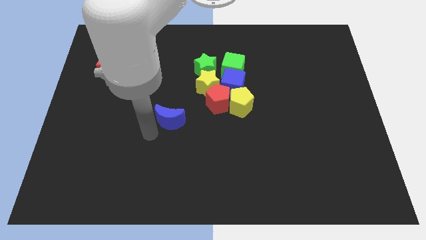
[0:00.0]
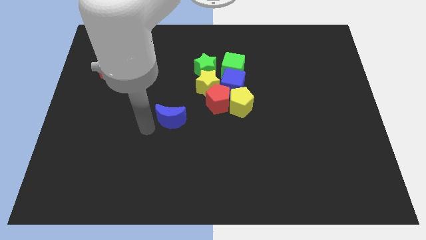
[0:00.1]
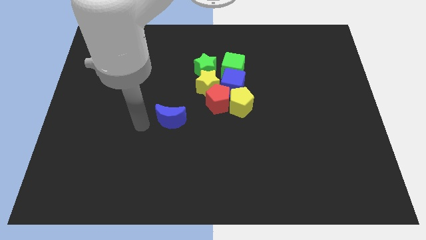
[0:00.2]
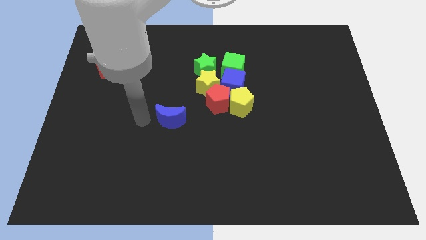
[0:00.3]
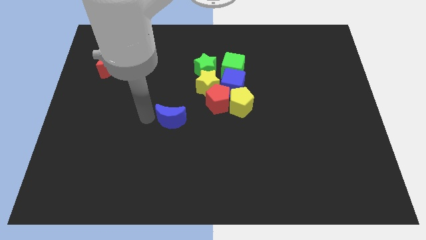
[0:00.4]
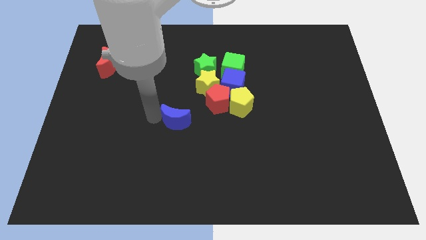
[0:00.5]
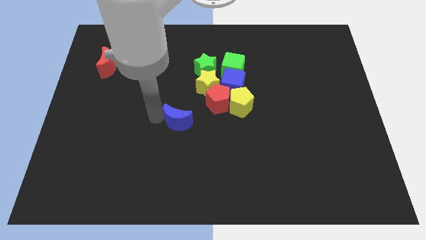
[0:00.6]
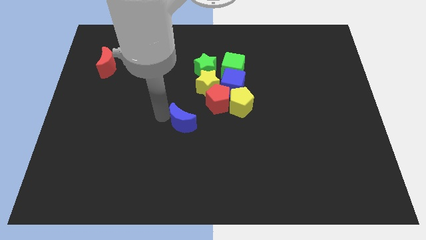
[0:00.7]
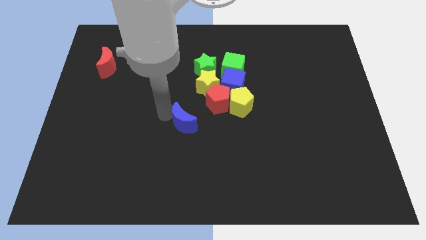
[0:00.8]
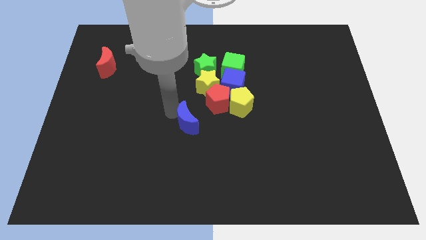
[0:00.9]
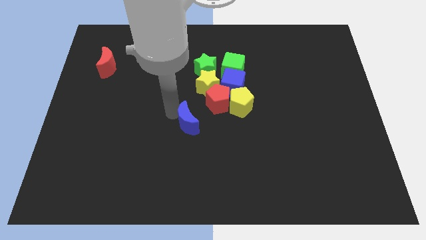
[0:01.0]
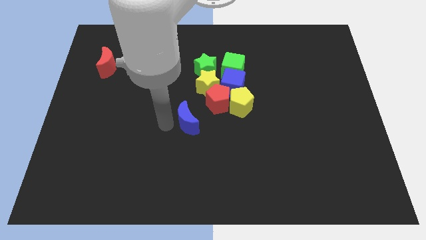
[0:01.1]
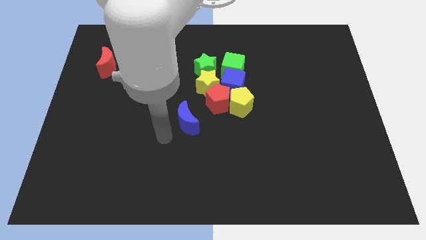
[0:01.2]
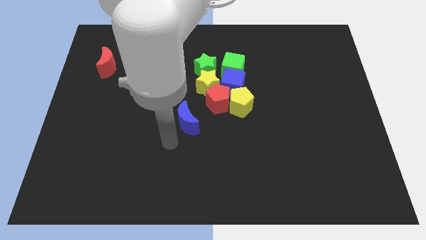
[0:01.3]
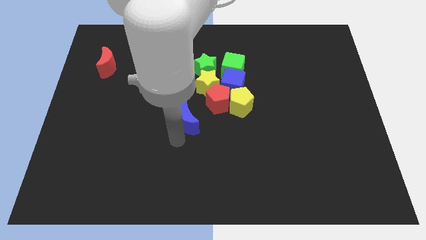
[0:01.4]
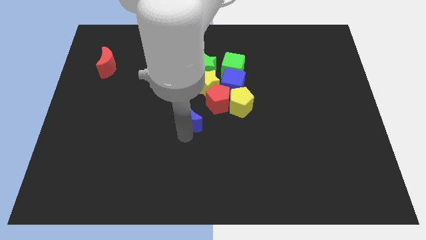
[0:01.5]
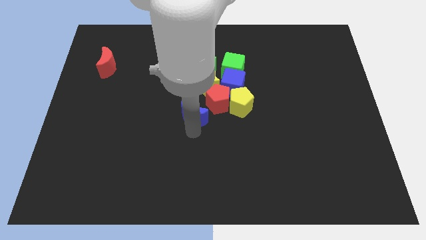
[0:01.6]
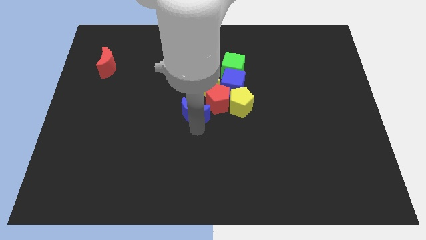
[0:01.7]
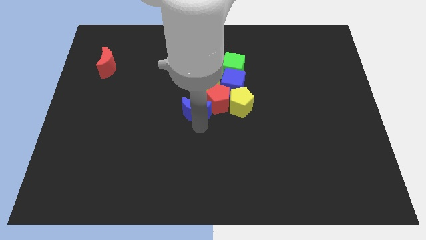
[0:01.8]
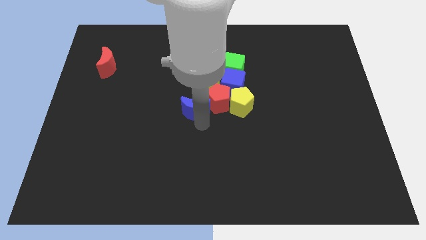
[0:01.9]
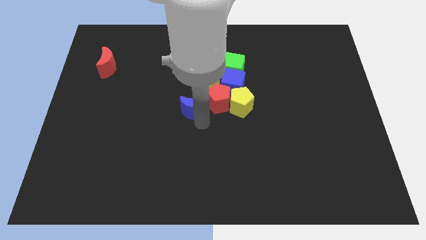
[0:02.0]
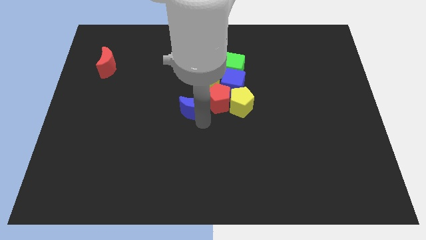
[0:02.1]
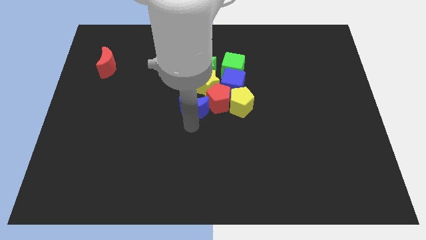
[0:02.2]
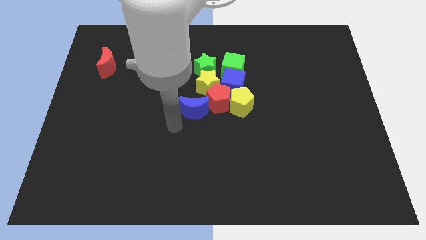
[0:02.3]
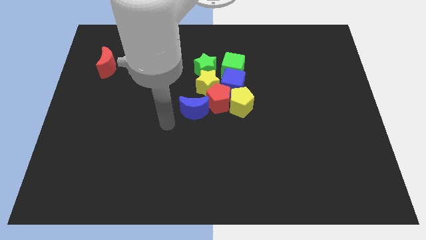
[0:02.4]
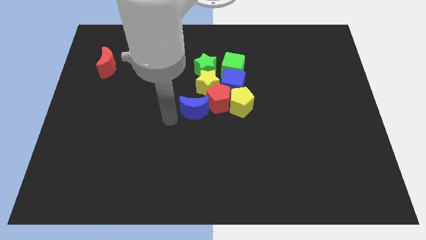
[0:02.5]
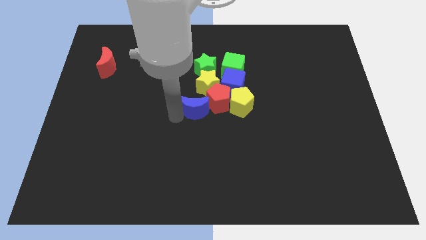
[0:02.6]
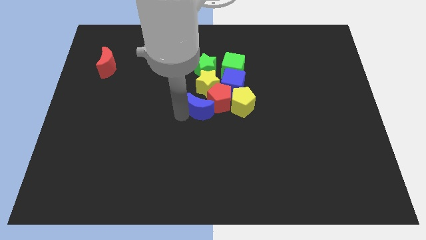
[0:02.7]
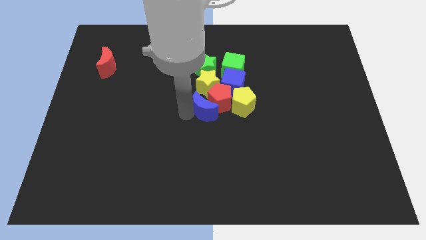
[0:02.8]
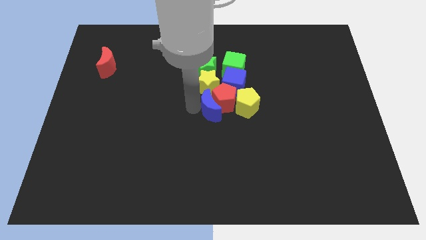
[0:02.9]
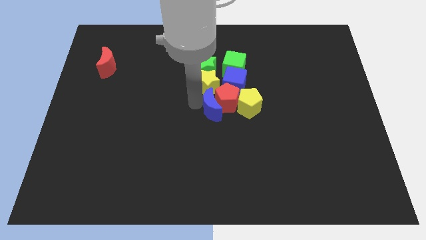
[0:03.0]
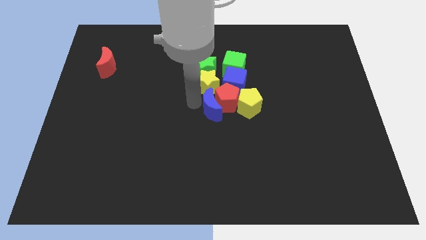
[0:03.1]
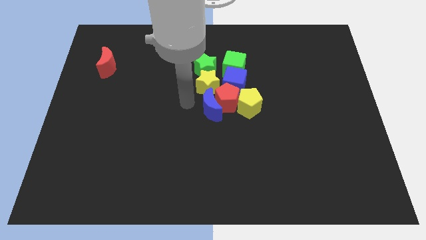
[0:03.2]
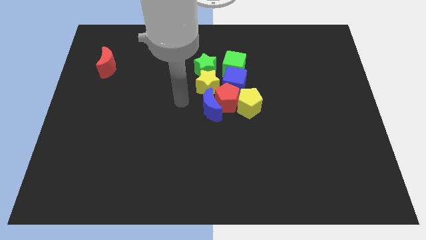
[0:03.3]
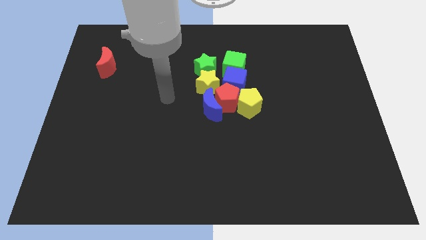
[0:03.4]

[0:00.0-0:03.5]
push blue moon into the group of blocks

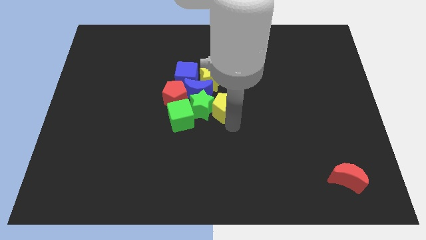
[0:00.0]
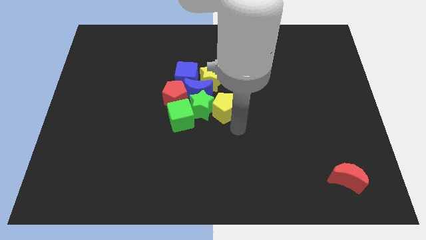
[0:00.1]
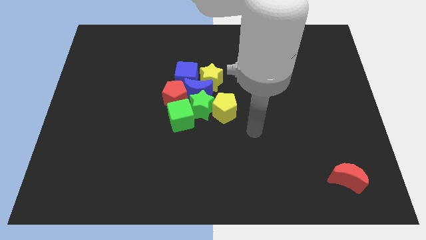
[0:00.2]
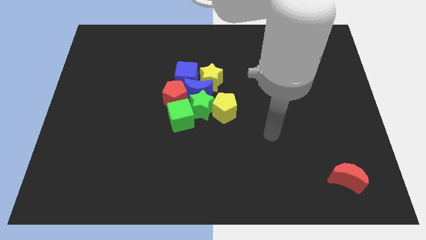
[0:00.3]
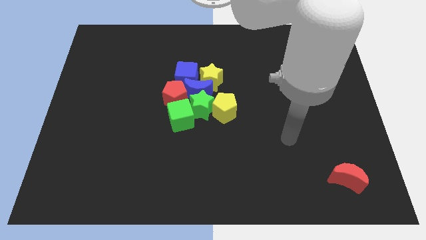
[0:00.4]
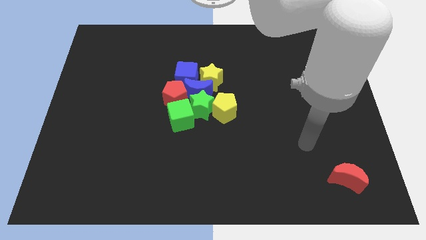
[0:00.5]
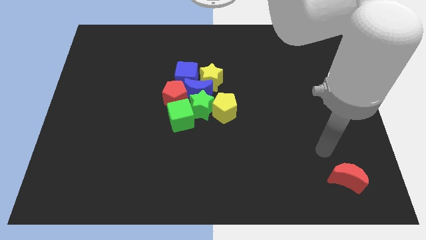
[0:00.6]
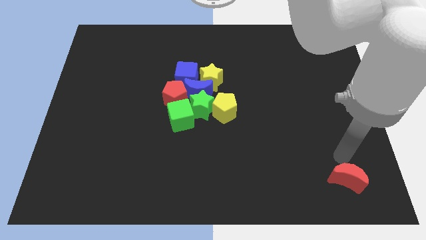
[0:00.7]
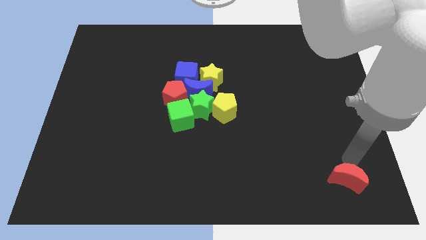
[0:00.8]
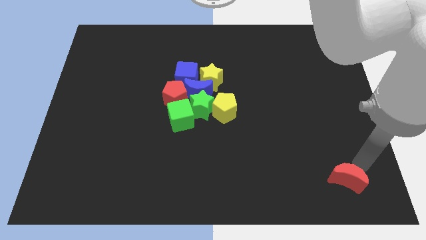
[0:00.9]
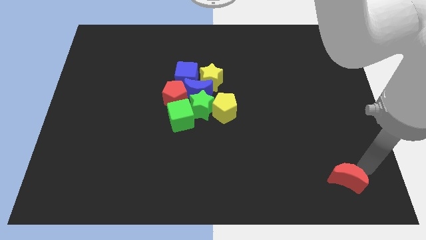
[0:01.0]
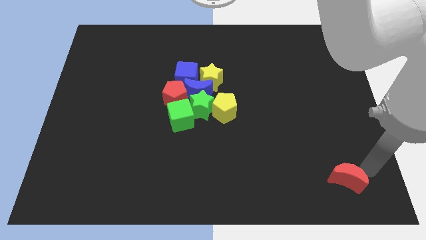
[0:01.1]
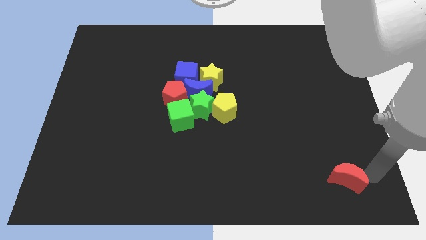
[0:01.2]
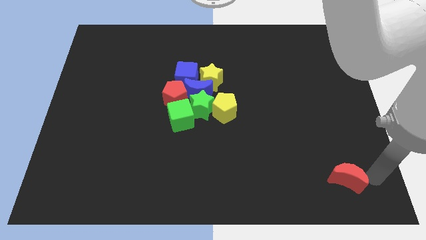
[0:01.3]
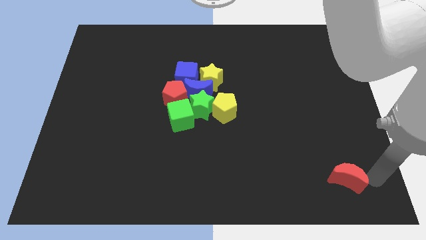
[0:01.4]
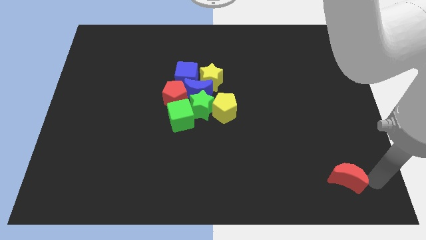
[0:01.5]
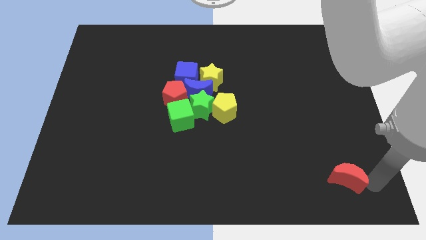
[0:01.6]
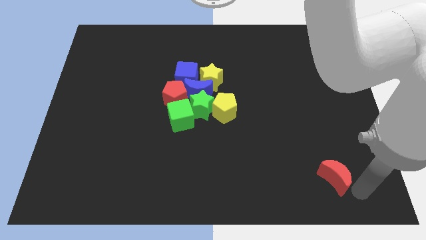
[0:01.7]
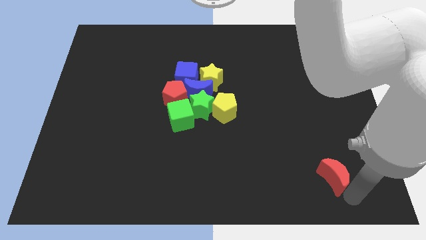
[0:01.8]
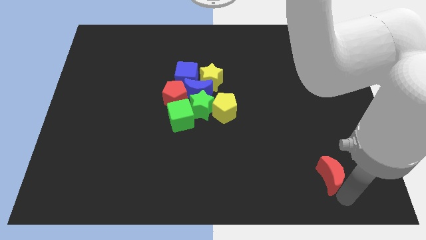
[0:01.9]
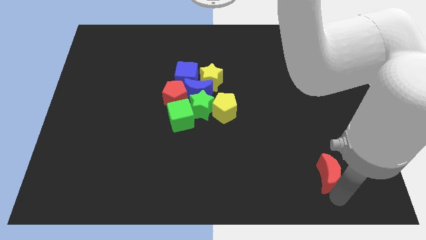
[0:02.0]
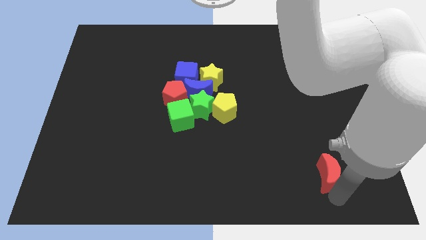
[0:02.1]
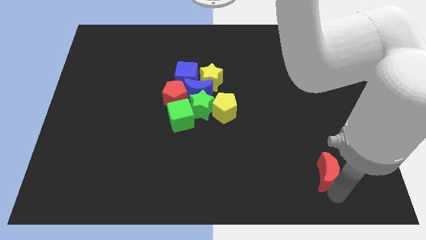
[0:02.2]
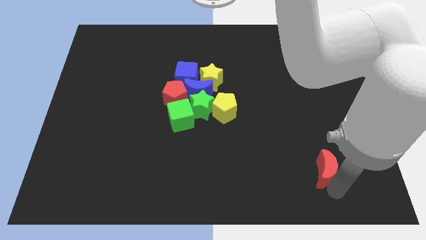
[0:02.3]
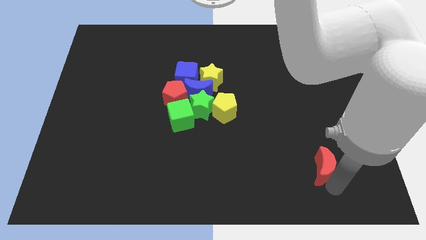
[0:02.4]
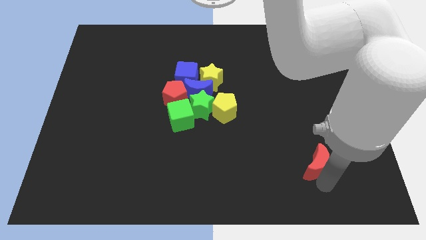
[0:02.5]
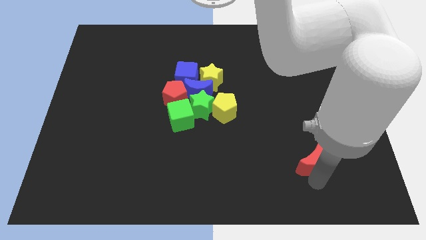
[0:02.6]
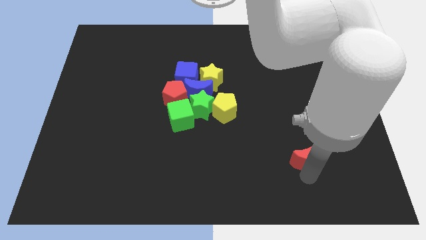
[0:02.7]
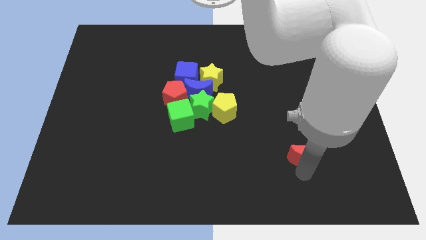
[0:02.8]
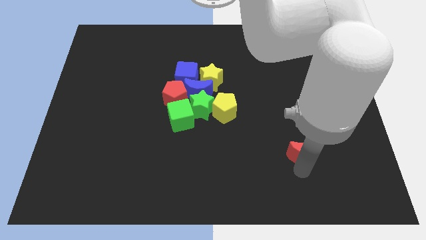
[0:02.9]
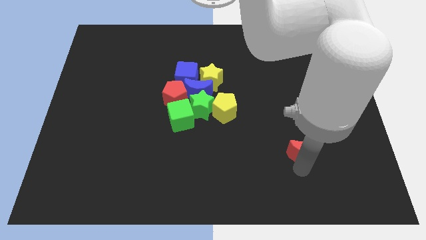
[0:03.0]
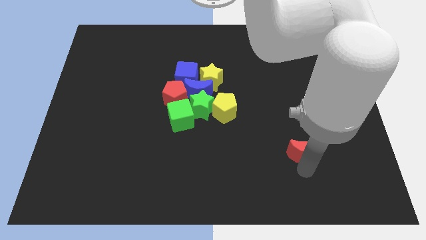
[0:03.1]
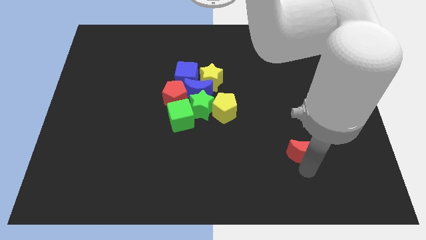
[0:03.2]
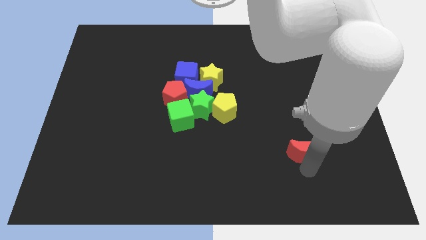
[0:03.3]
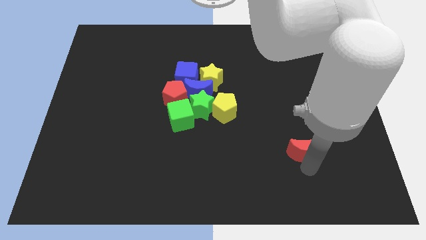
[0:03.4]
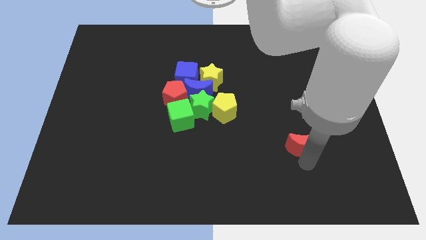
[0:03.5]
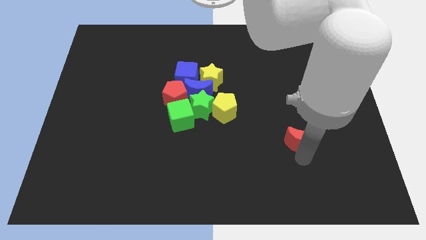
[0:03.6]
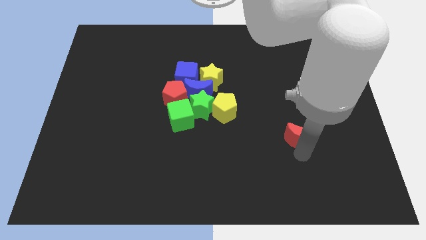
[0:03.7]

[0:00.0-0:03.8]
push the red moon towards the top side of the board

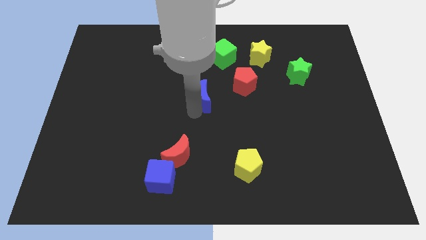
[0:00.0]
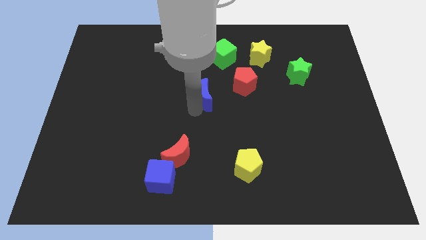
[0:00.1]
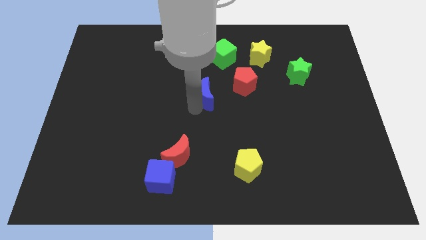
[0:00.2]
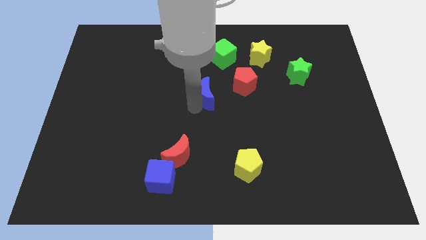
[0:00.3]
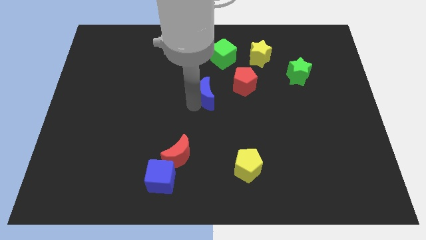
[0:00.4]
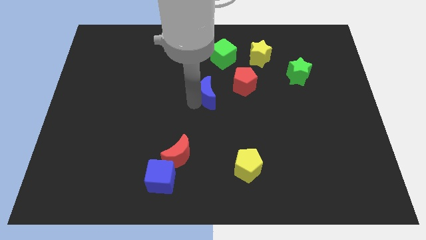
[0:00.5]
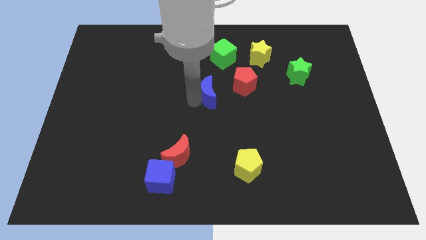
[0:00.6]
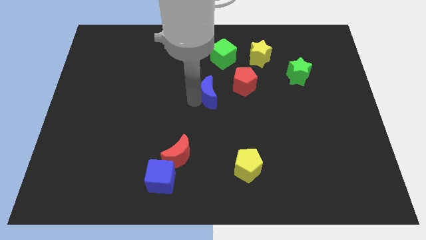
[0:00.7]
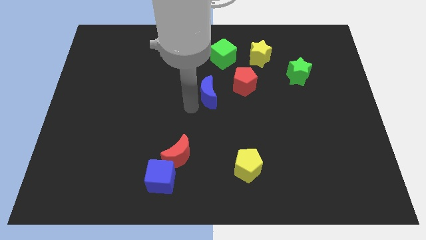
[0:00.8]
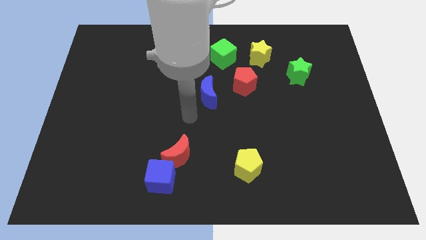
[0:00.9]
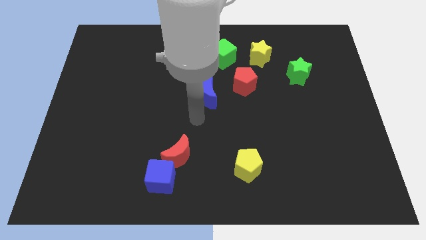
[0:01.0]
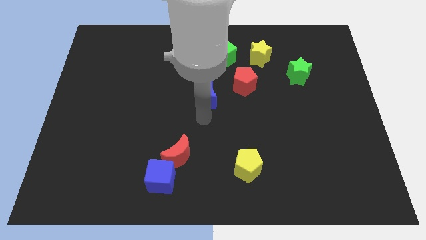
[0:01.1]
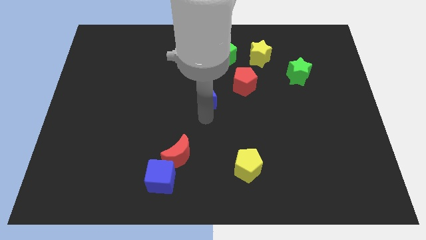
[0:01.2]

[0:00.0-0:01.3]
place the blue moon diagonally top left to the yellow pentagon

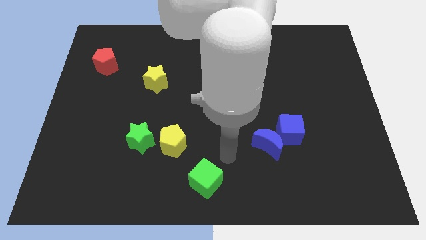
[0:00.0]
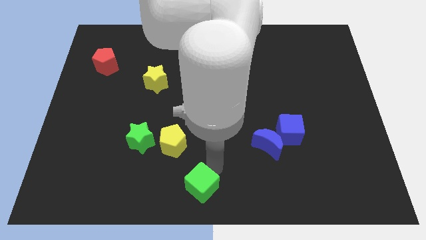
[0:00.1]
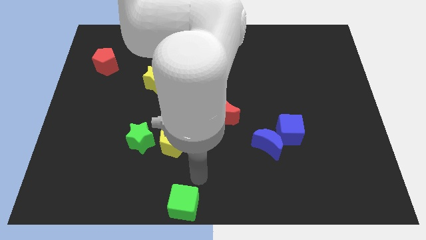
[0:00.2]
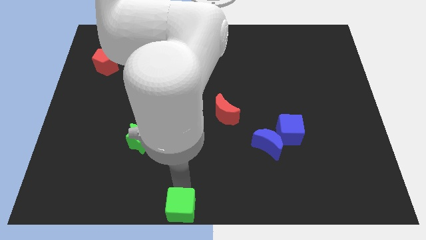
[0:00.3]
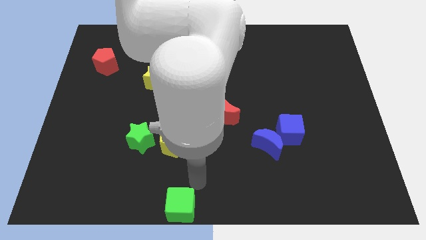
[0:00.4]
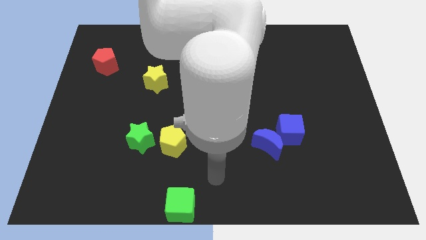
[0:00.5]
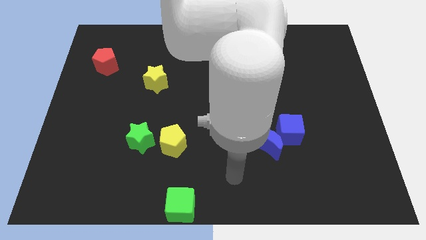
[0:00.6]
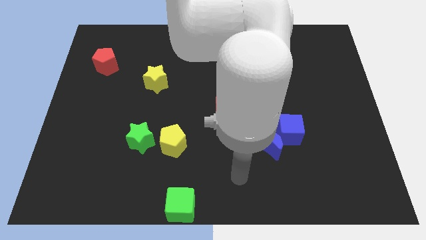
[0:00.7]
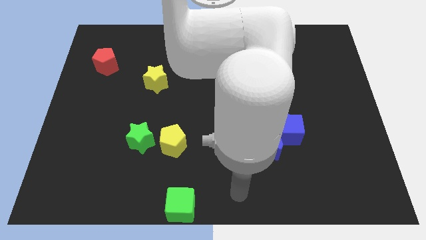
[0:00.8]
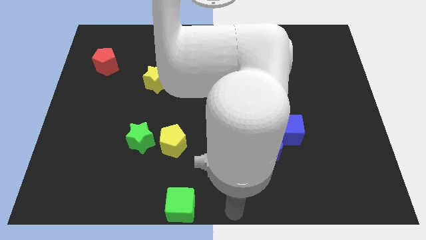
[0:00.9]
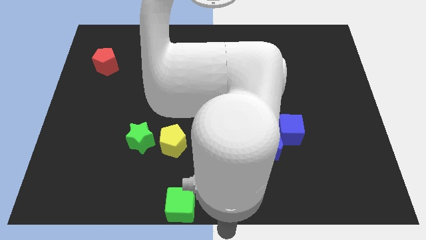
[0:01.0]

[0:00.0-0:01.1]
push the green cube towards the bottom center of the board
